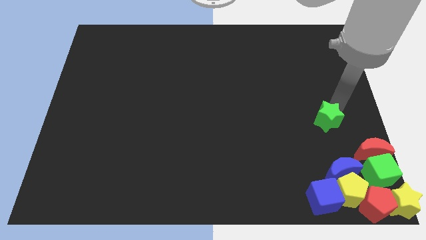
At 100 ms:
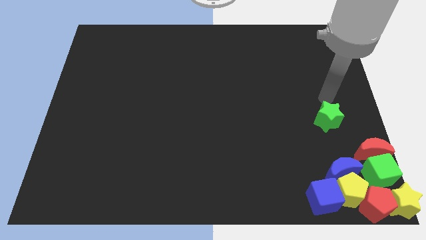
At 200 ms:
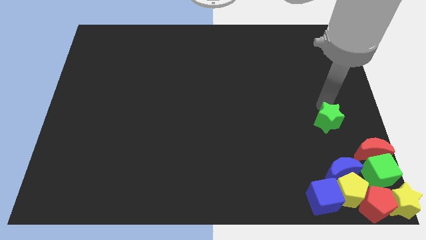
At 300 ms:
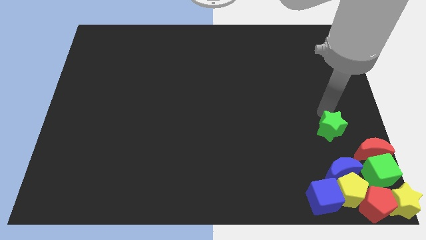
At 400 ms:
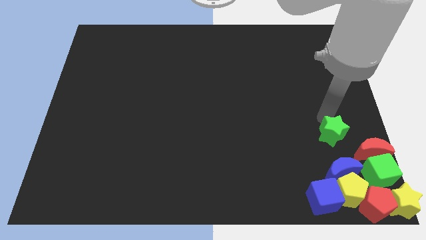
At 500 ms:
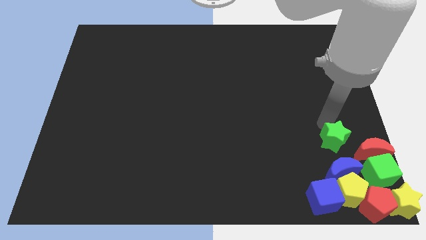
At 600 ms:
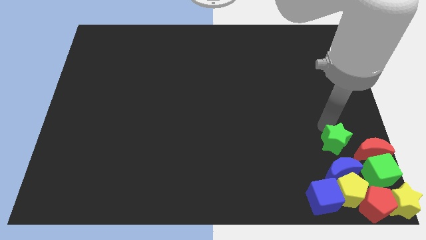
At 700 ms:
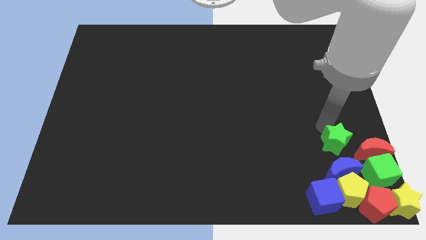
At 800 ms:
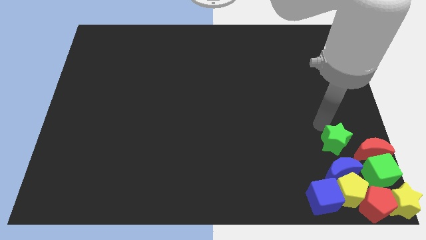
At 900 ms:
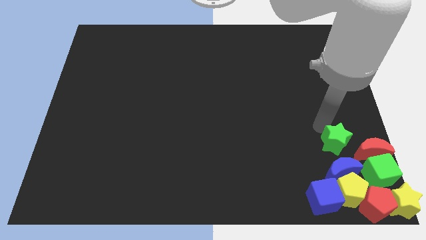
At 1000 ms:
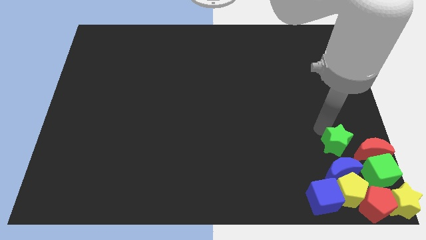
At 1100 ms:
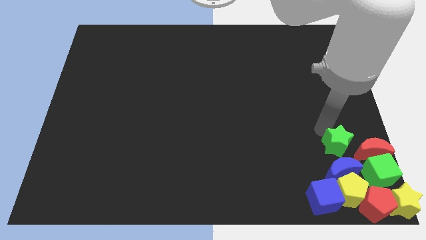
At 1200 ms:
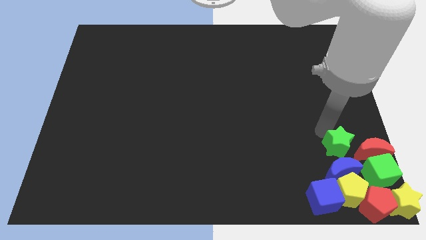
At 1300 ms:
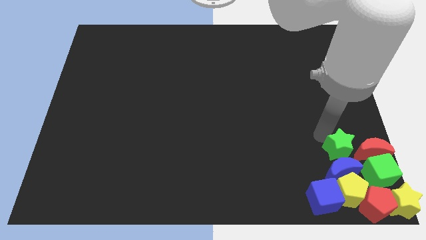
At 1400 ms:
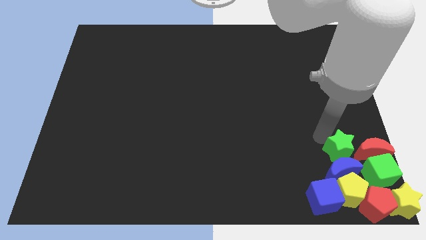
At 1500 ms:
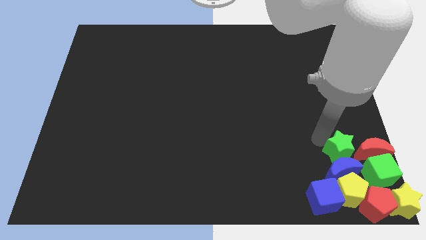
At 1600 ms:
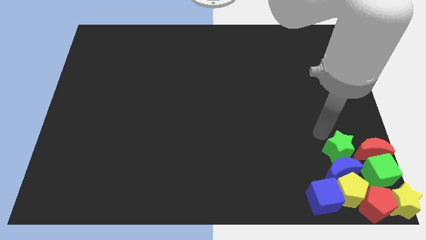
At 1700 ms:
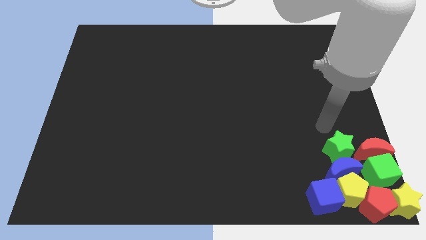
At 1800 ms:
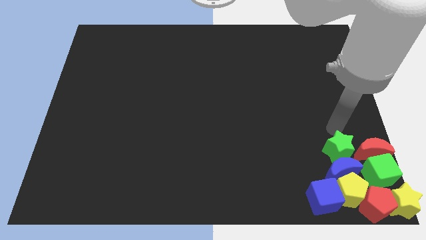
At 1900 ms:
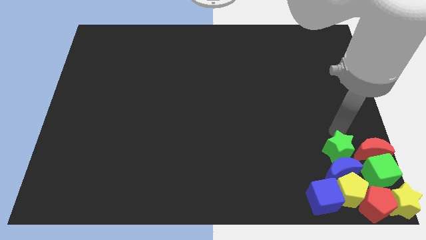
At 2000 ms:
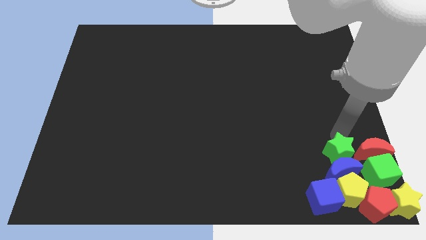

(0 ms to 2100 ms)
push the green star left to the red crescent

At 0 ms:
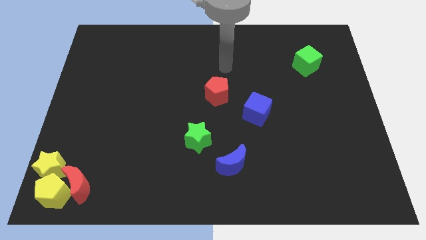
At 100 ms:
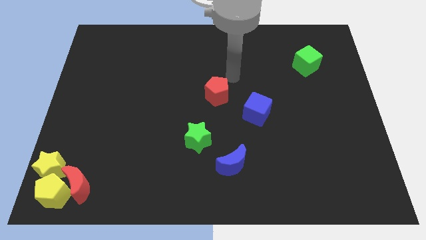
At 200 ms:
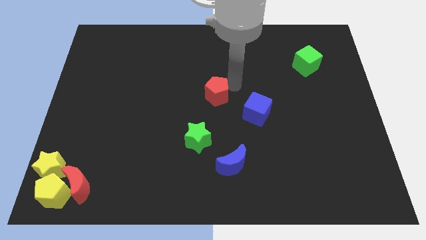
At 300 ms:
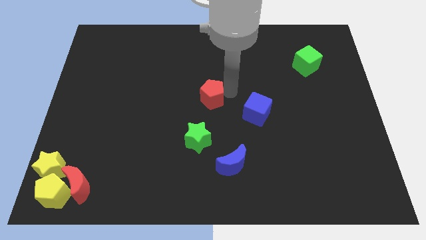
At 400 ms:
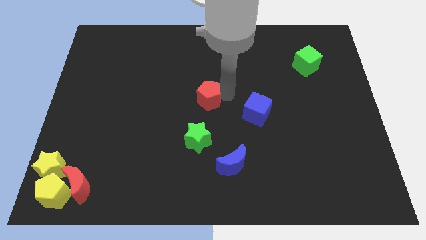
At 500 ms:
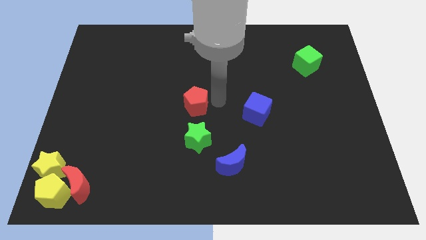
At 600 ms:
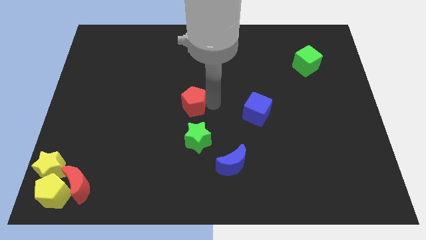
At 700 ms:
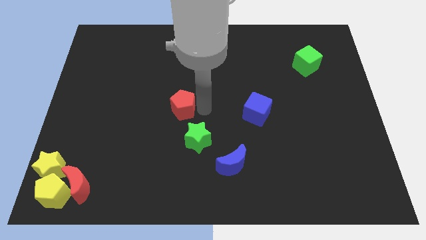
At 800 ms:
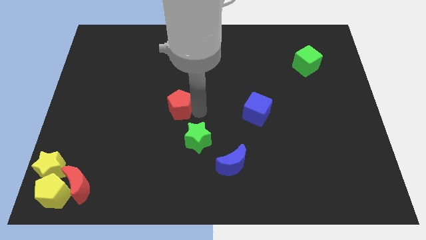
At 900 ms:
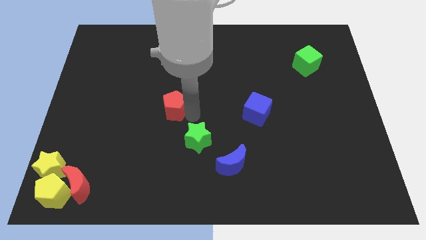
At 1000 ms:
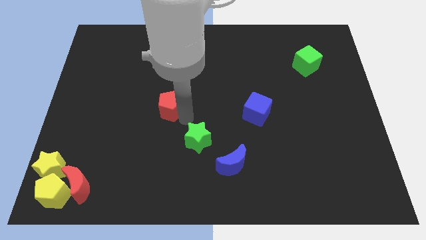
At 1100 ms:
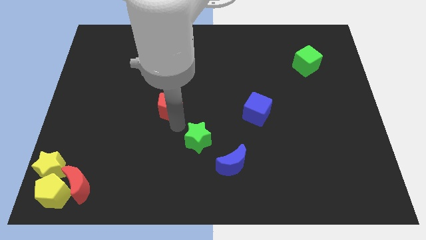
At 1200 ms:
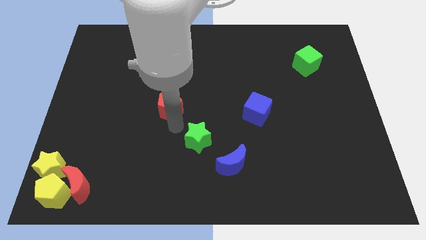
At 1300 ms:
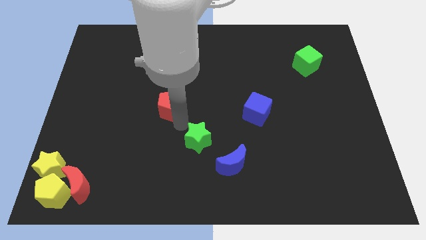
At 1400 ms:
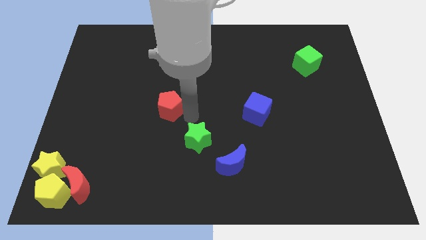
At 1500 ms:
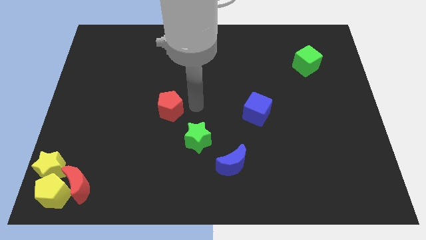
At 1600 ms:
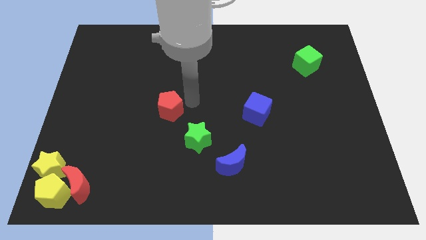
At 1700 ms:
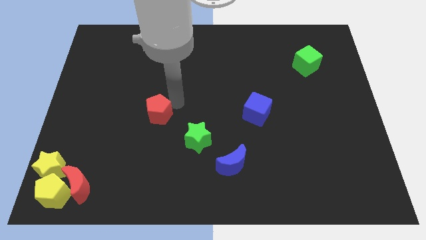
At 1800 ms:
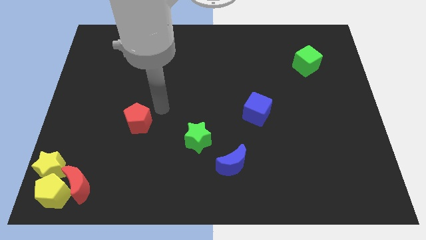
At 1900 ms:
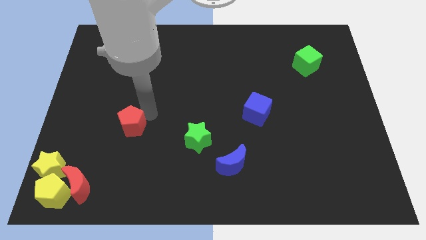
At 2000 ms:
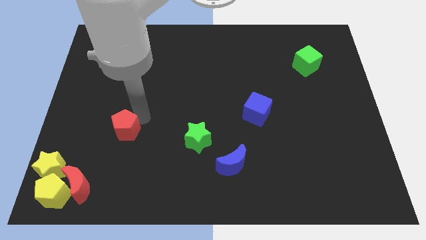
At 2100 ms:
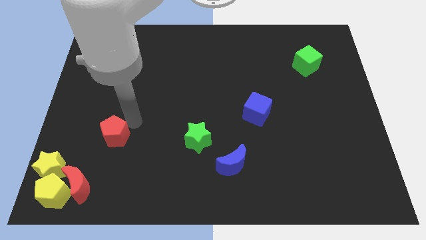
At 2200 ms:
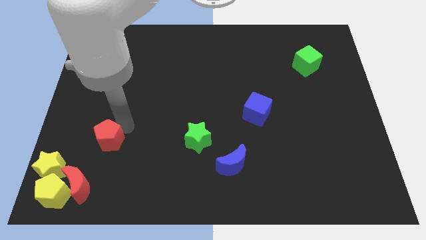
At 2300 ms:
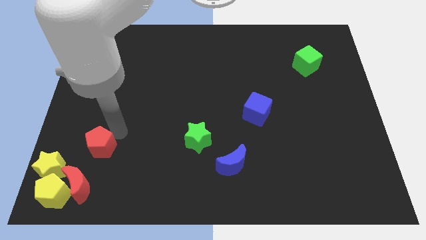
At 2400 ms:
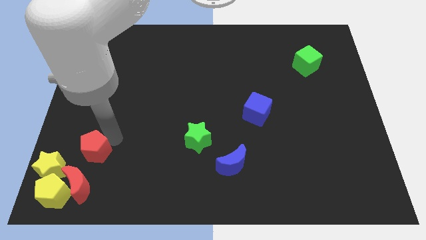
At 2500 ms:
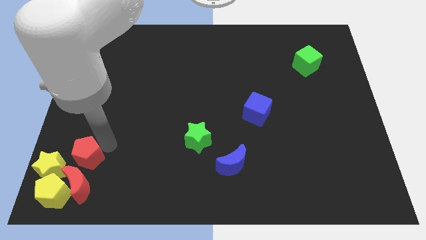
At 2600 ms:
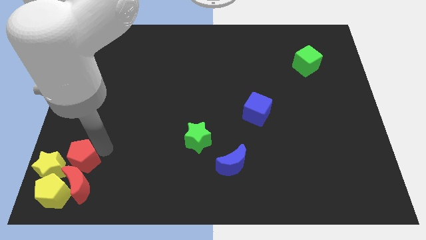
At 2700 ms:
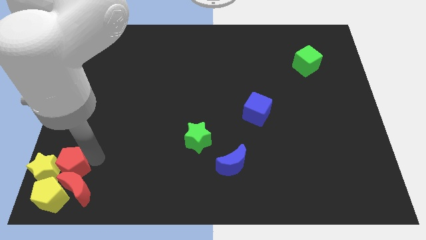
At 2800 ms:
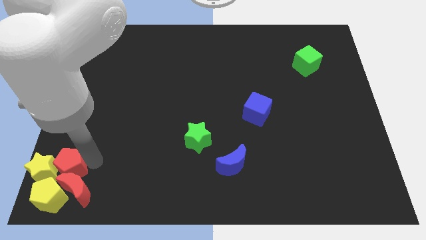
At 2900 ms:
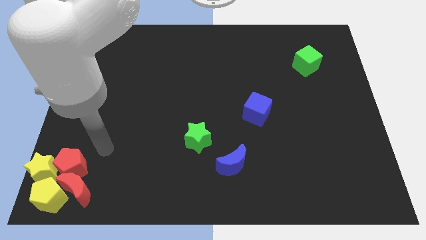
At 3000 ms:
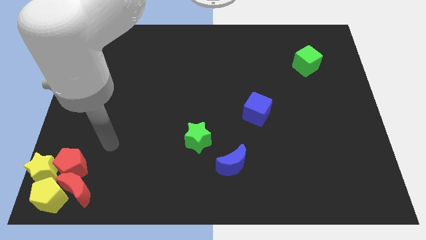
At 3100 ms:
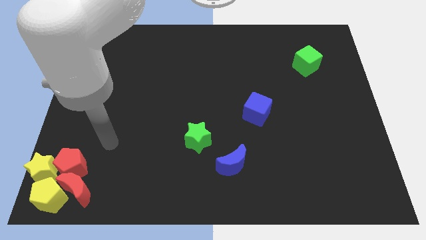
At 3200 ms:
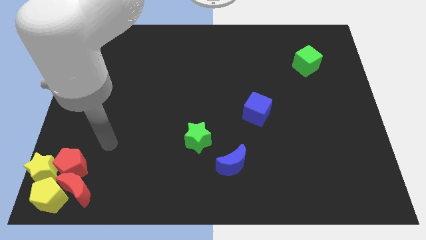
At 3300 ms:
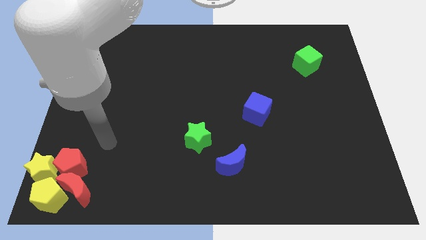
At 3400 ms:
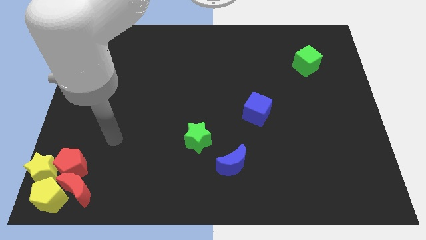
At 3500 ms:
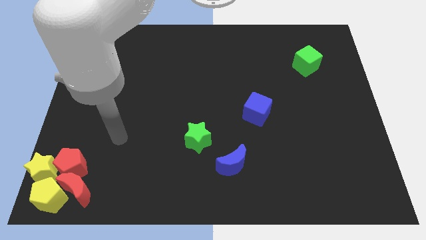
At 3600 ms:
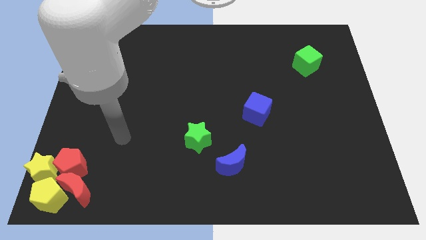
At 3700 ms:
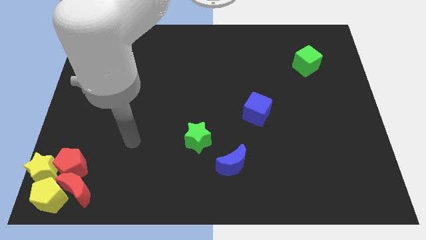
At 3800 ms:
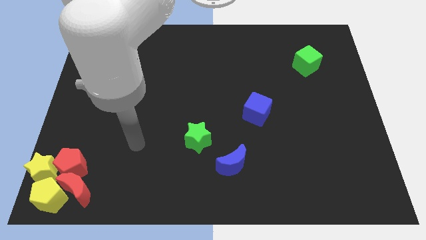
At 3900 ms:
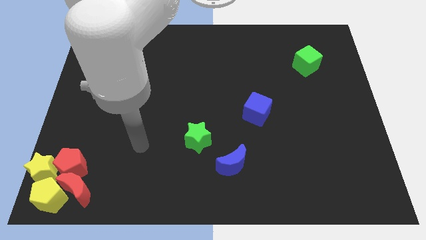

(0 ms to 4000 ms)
move the red pentagon into the group of blocks

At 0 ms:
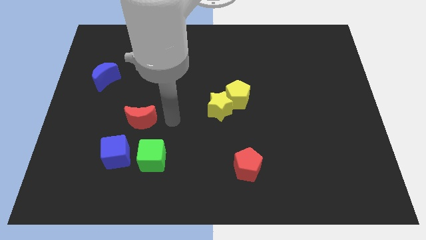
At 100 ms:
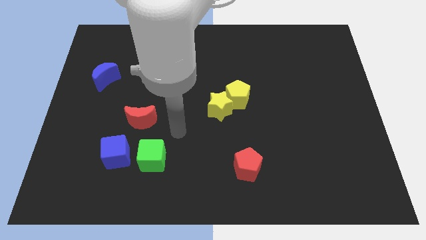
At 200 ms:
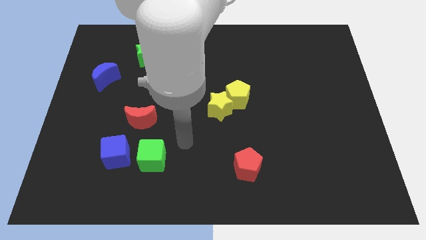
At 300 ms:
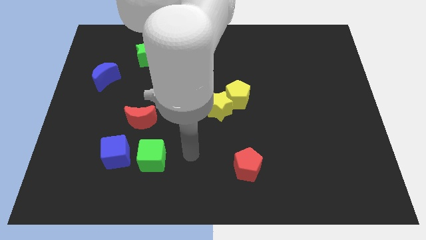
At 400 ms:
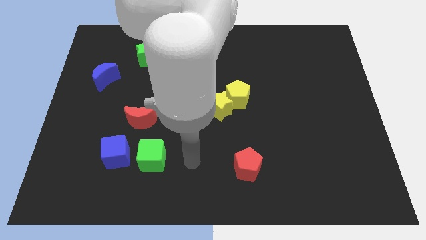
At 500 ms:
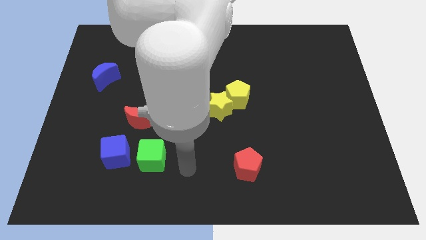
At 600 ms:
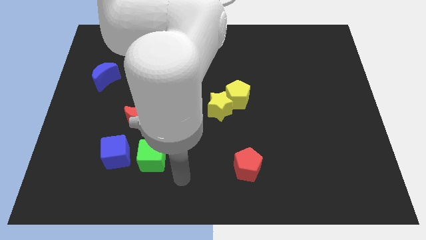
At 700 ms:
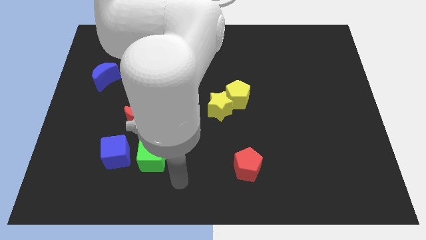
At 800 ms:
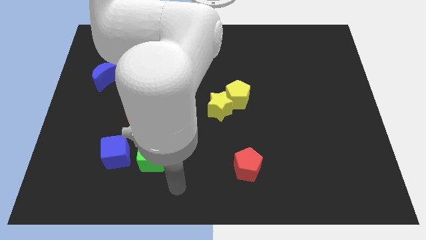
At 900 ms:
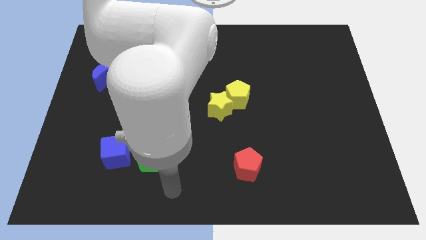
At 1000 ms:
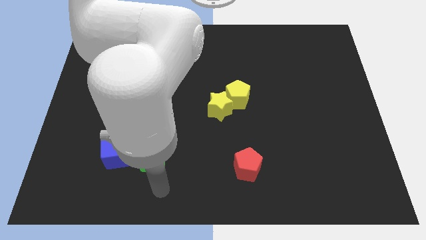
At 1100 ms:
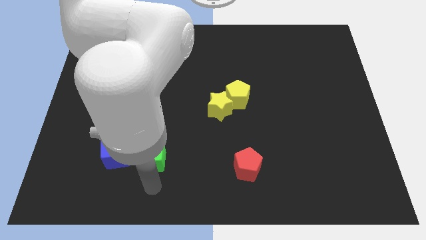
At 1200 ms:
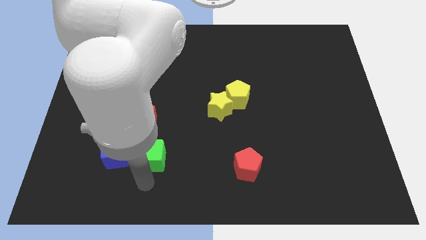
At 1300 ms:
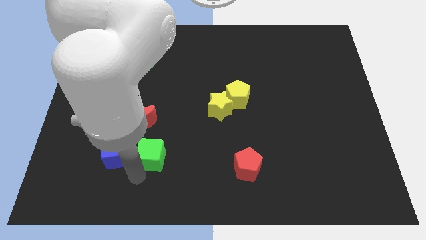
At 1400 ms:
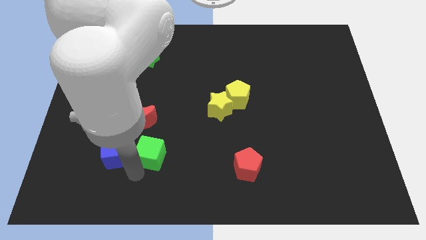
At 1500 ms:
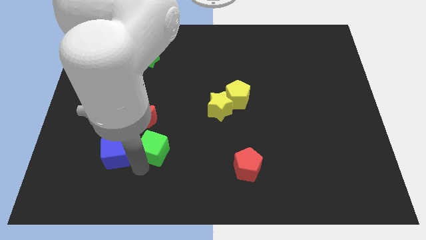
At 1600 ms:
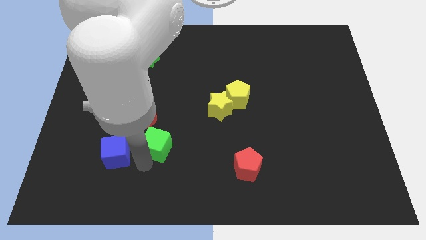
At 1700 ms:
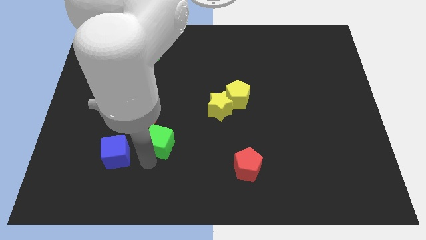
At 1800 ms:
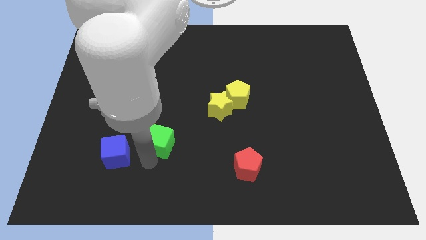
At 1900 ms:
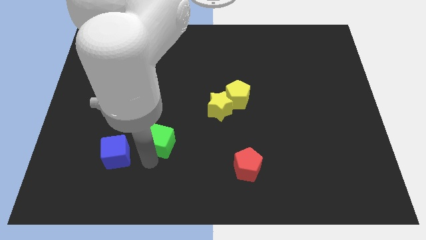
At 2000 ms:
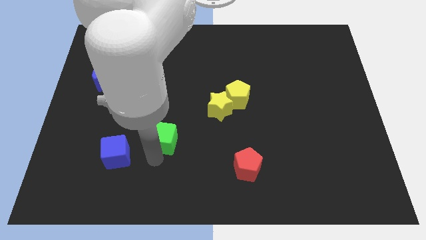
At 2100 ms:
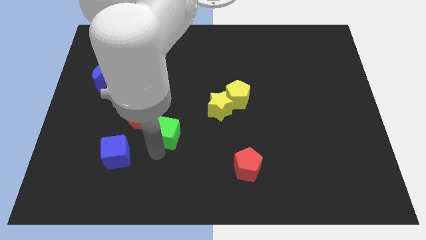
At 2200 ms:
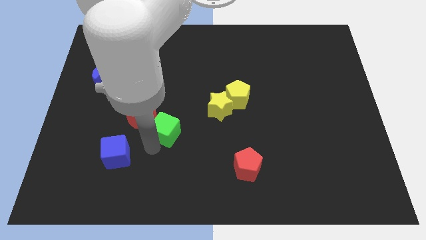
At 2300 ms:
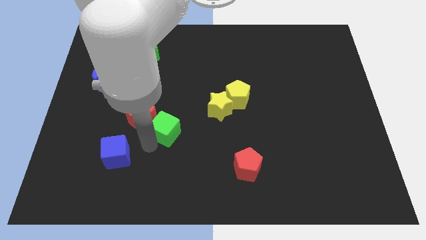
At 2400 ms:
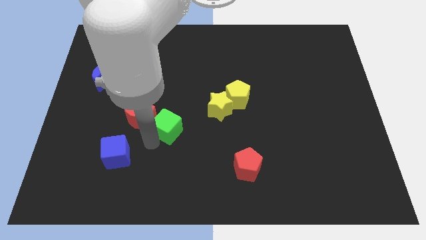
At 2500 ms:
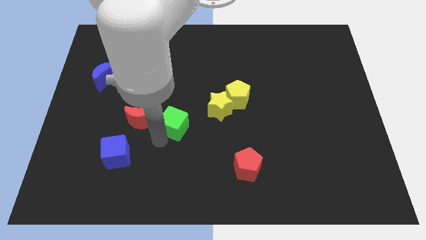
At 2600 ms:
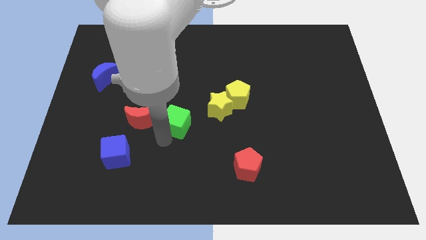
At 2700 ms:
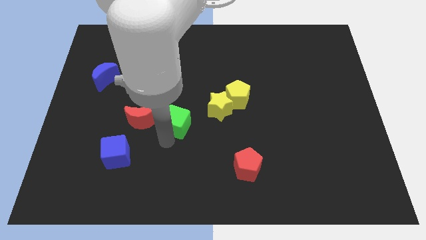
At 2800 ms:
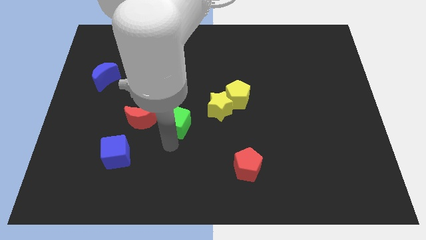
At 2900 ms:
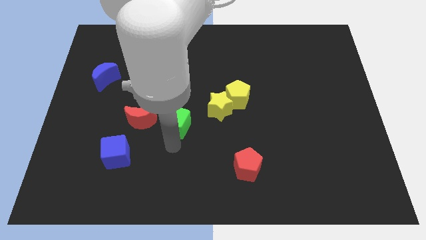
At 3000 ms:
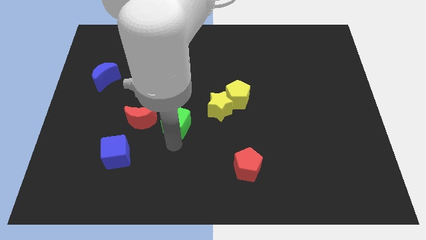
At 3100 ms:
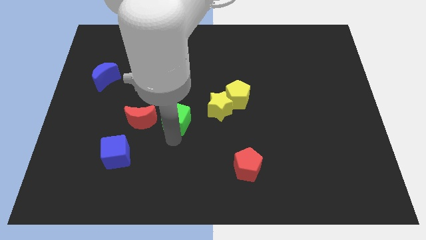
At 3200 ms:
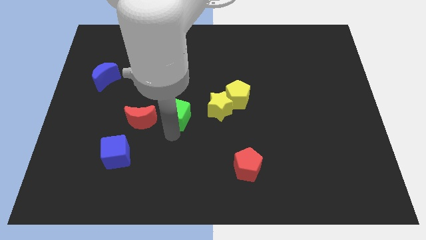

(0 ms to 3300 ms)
put the green cube at the right side of the crescent
